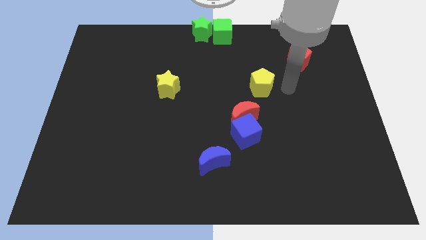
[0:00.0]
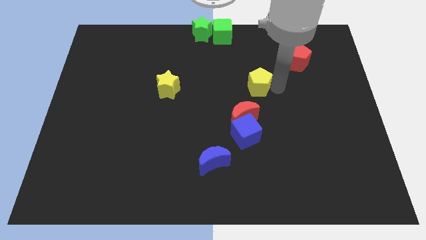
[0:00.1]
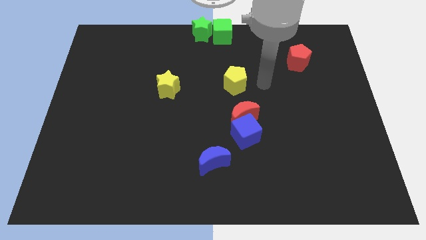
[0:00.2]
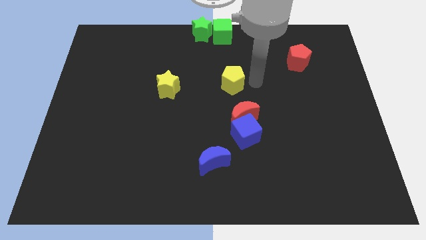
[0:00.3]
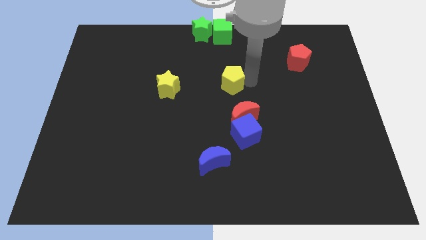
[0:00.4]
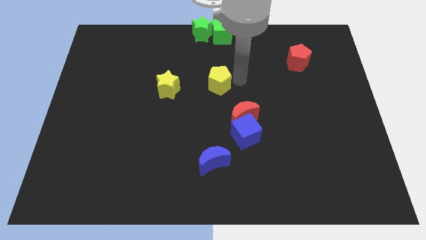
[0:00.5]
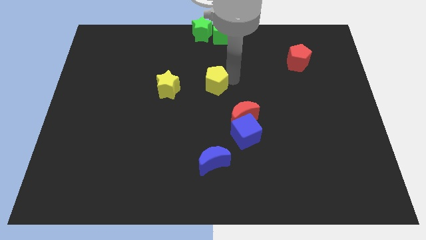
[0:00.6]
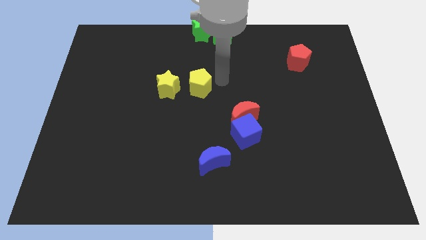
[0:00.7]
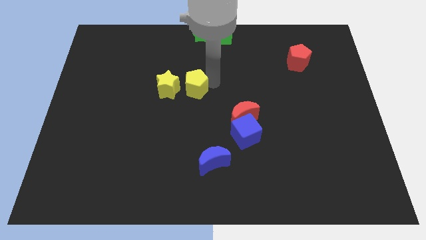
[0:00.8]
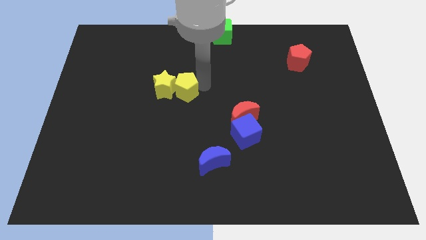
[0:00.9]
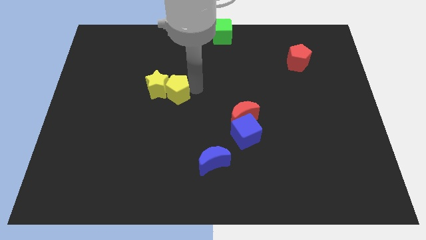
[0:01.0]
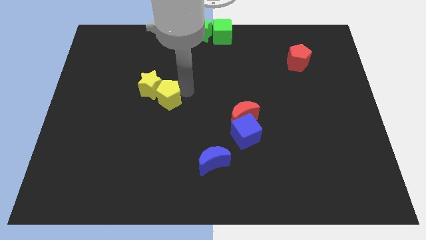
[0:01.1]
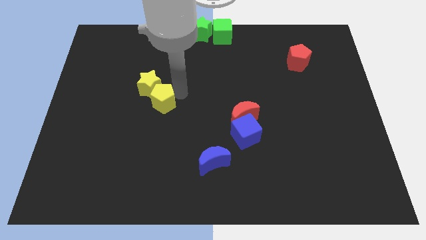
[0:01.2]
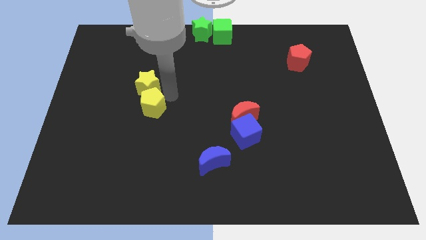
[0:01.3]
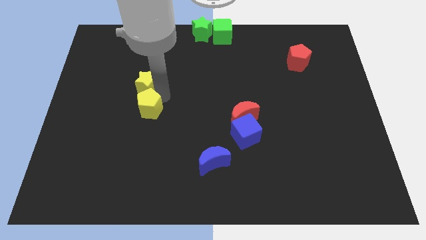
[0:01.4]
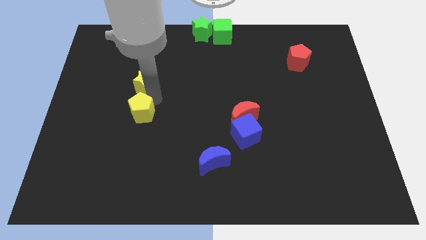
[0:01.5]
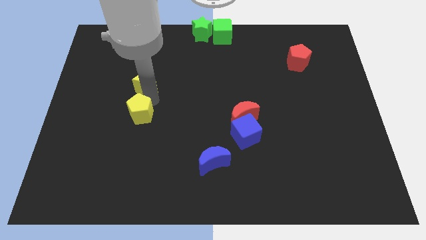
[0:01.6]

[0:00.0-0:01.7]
slide the yellow pentagon to the bottom of the yellow star

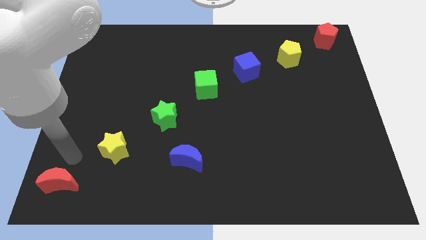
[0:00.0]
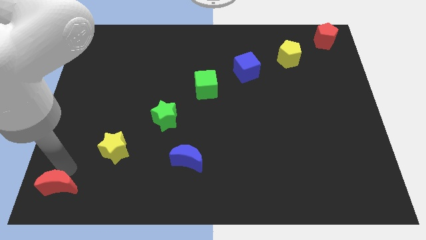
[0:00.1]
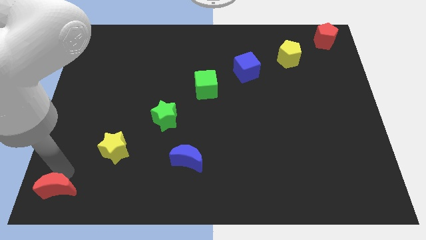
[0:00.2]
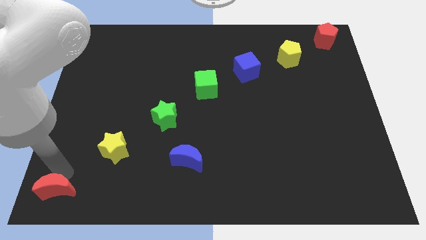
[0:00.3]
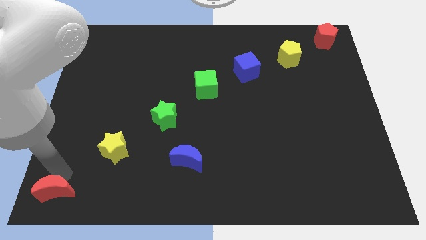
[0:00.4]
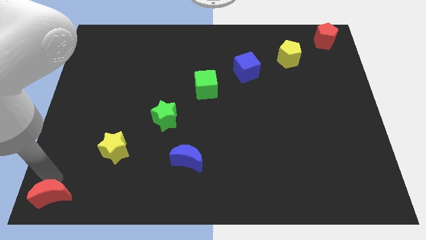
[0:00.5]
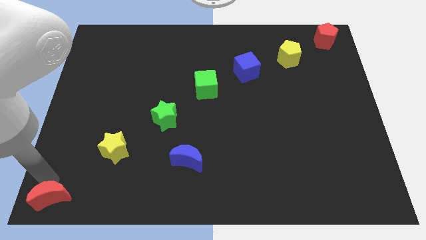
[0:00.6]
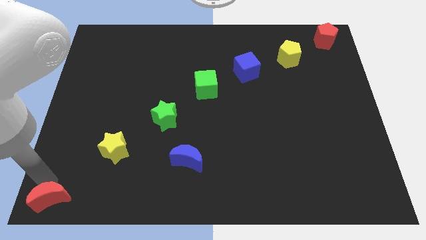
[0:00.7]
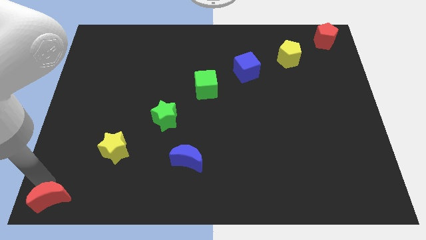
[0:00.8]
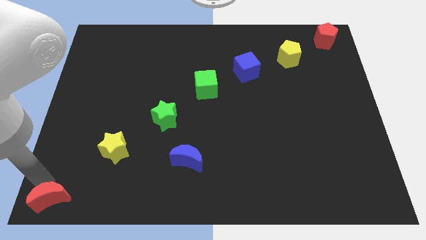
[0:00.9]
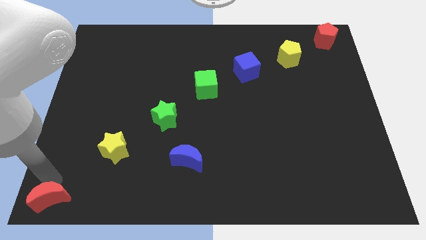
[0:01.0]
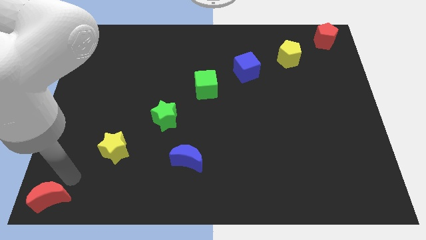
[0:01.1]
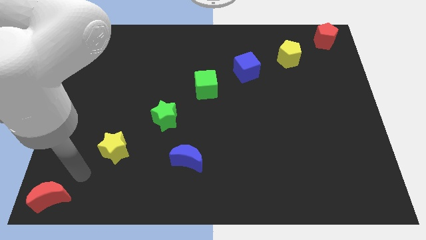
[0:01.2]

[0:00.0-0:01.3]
move red crescent to the bottom left of the board

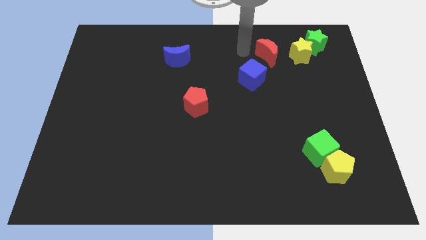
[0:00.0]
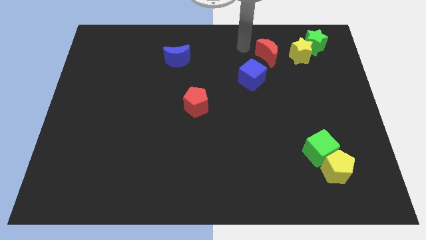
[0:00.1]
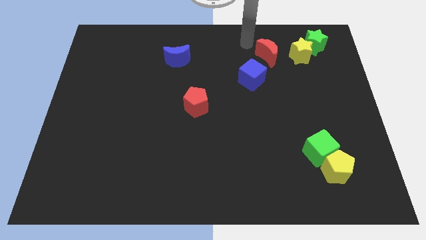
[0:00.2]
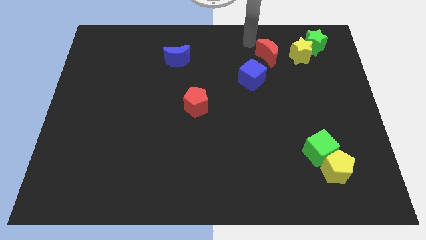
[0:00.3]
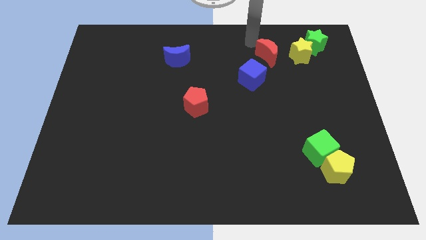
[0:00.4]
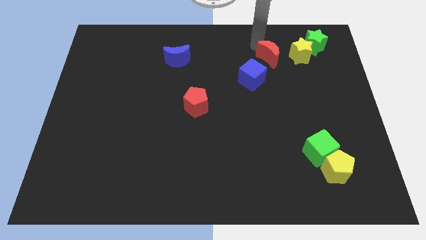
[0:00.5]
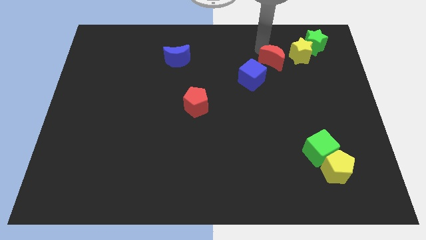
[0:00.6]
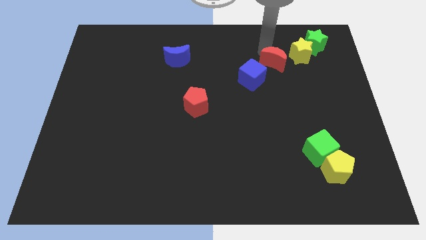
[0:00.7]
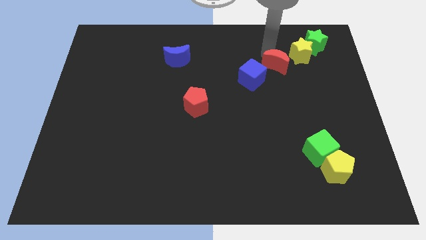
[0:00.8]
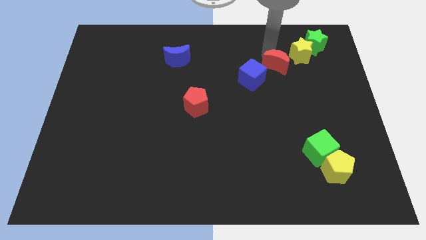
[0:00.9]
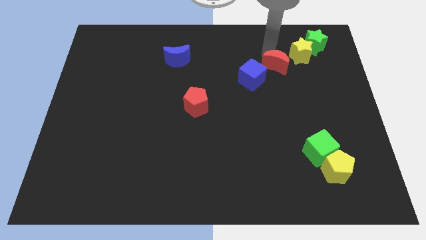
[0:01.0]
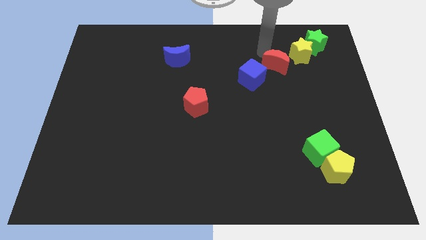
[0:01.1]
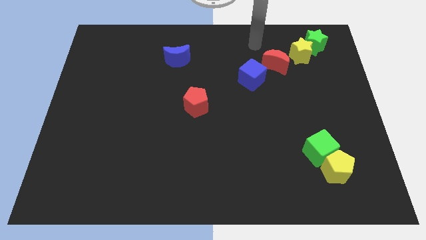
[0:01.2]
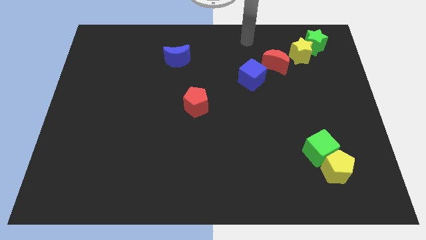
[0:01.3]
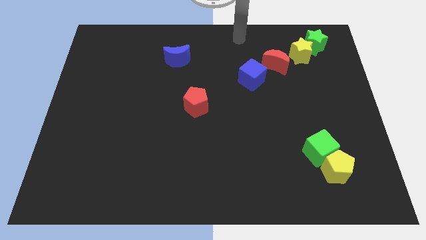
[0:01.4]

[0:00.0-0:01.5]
slide the red moon towards the center right

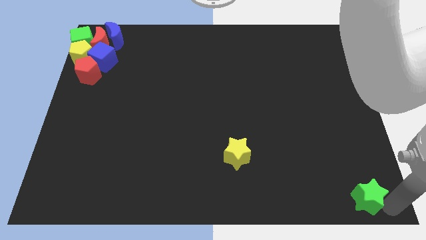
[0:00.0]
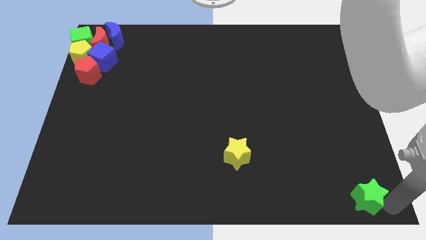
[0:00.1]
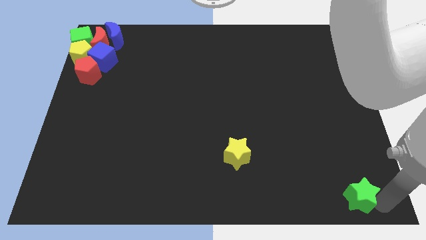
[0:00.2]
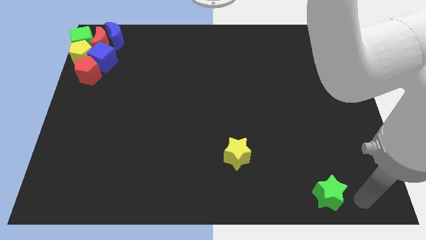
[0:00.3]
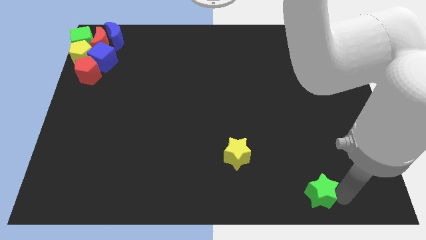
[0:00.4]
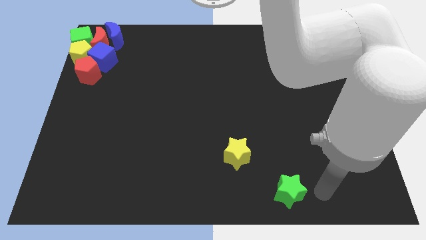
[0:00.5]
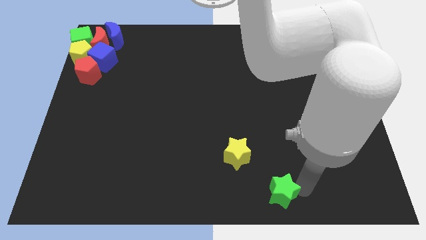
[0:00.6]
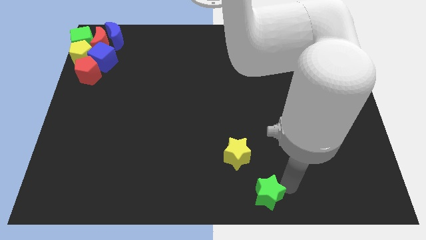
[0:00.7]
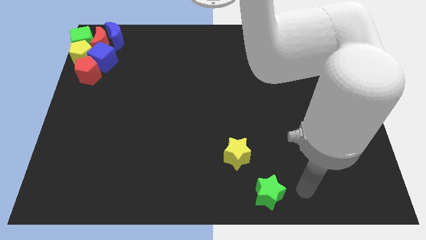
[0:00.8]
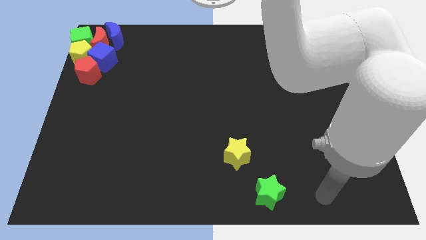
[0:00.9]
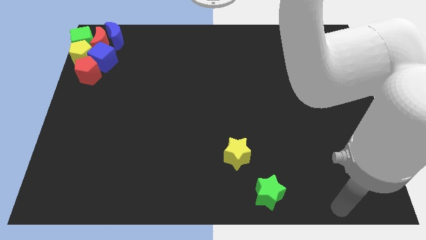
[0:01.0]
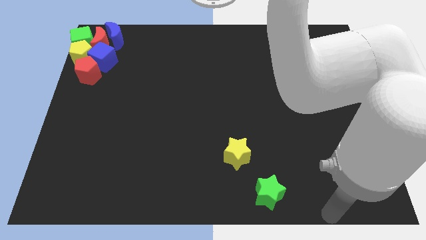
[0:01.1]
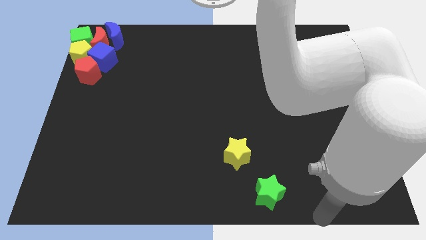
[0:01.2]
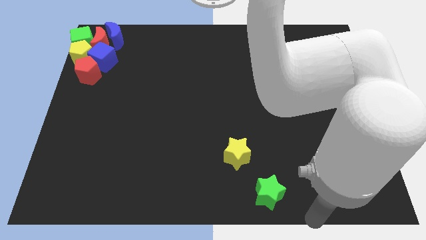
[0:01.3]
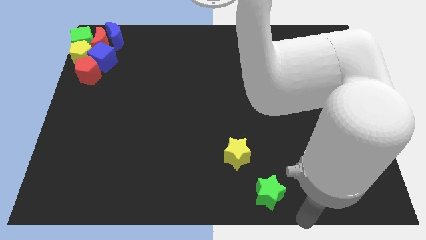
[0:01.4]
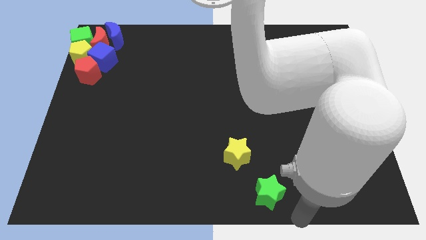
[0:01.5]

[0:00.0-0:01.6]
move the green star diagonally on the bottom right side of the yellow star

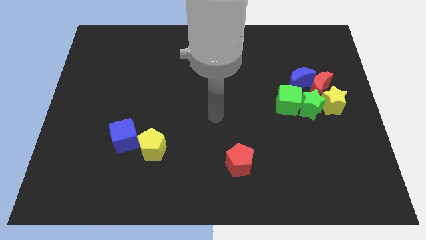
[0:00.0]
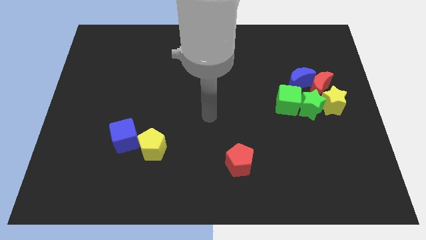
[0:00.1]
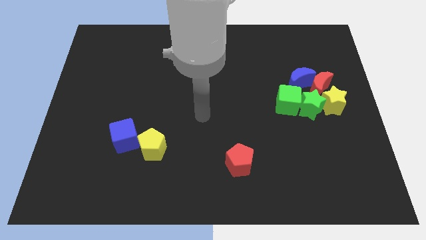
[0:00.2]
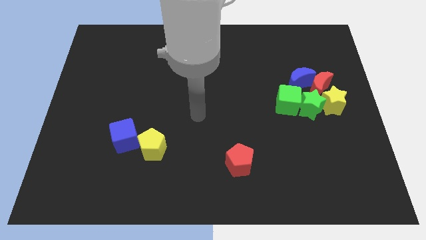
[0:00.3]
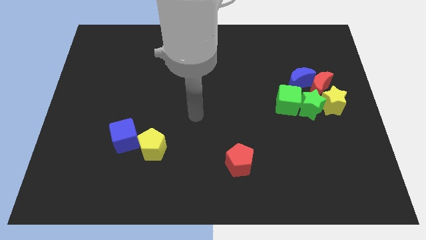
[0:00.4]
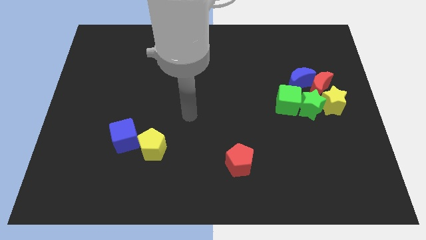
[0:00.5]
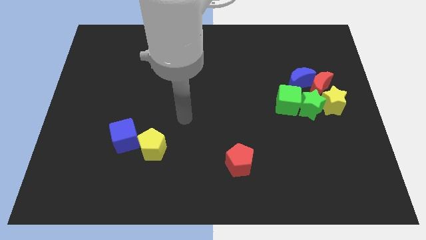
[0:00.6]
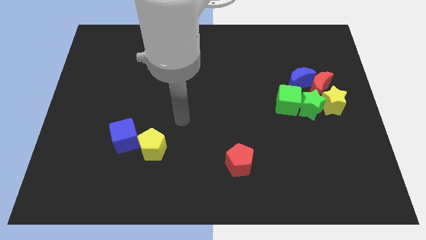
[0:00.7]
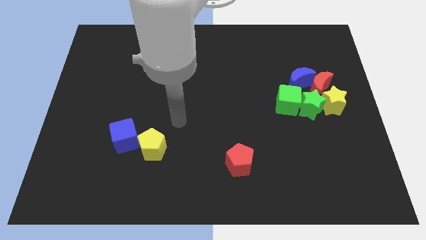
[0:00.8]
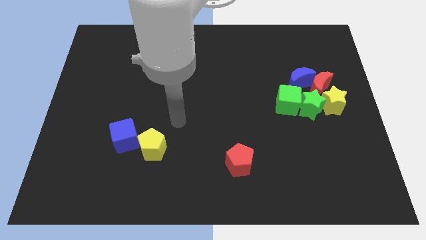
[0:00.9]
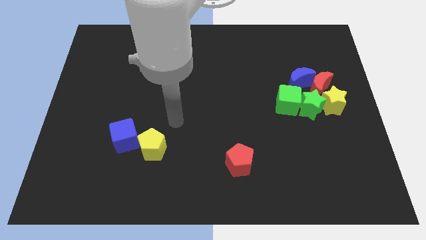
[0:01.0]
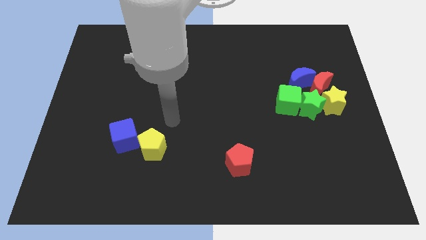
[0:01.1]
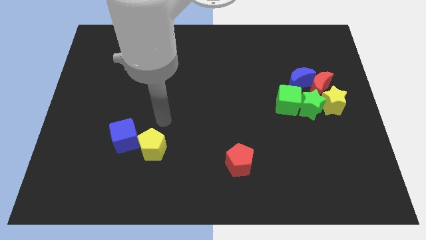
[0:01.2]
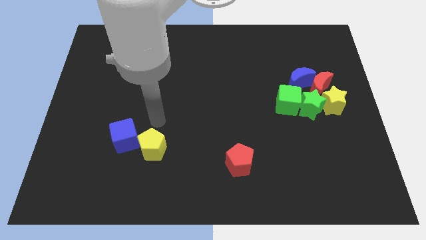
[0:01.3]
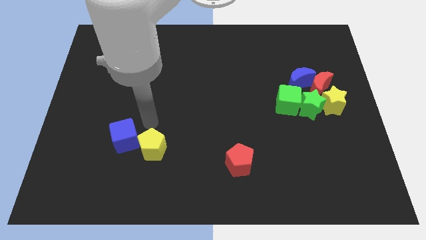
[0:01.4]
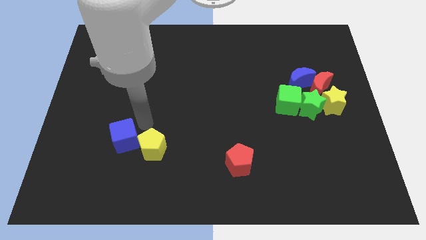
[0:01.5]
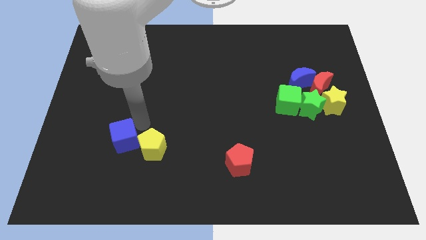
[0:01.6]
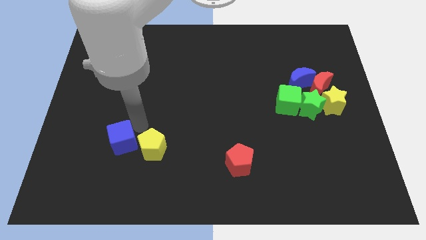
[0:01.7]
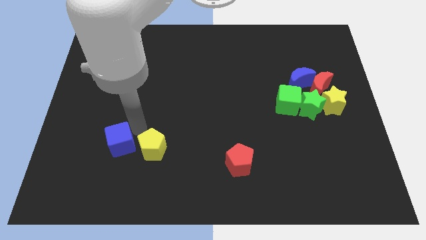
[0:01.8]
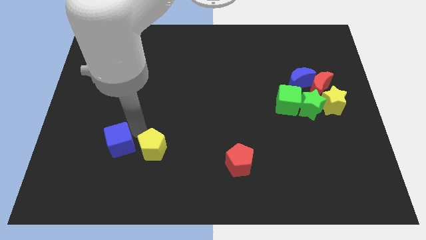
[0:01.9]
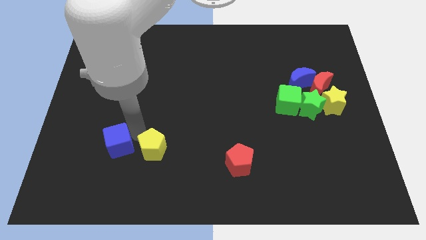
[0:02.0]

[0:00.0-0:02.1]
touch right side of blue cube

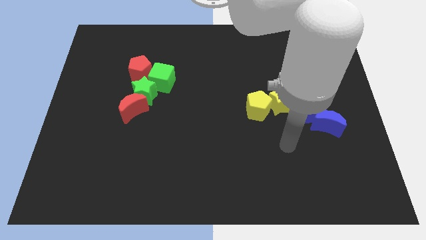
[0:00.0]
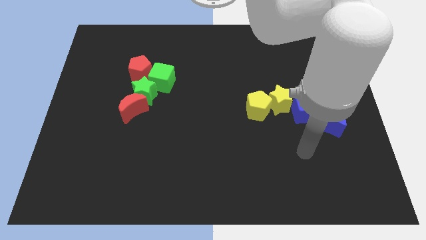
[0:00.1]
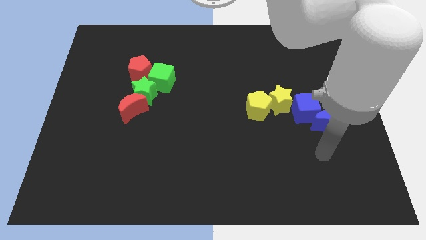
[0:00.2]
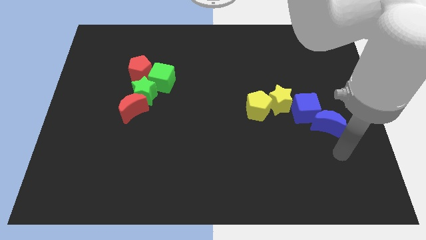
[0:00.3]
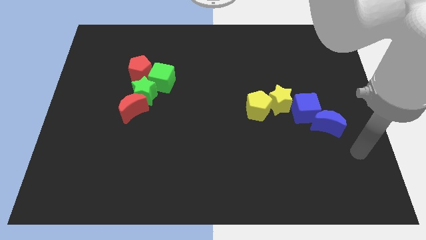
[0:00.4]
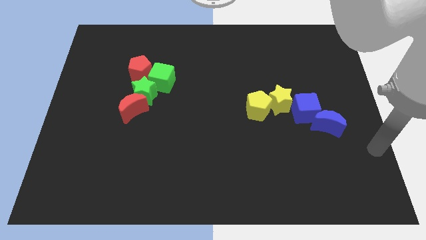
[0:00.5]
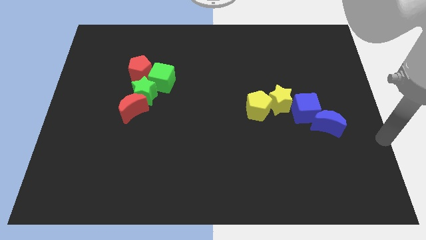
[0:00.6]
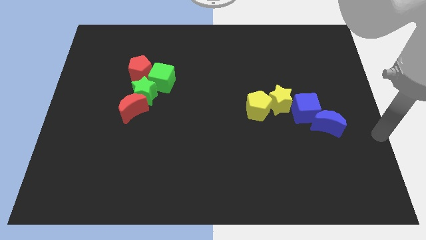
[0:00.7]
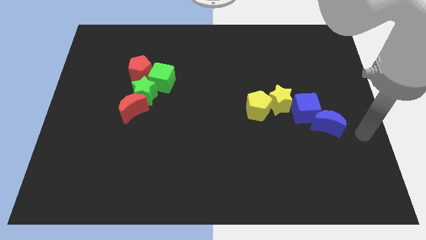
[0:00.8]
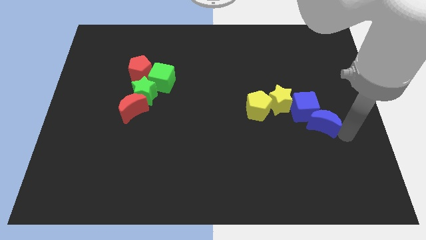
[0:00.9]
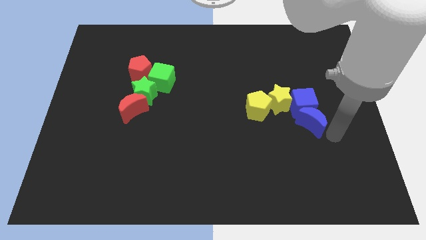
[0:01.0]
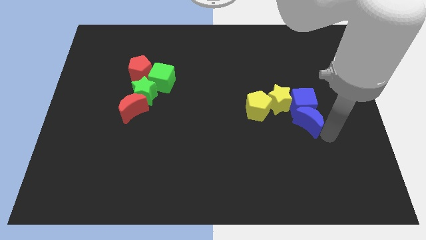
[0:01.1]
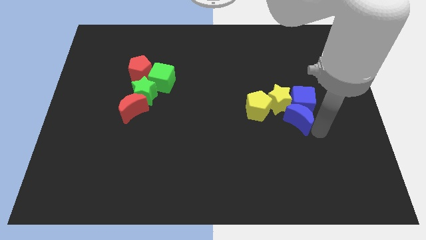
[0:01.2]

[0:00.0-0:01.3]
push the blue crescent towards the blue cube
